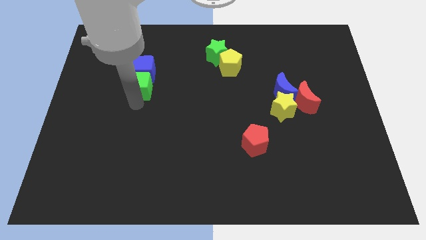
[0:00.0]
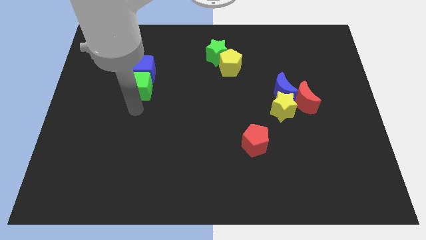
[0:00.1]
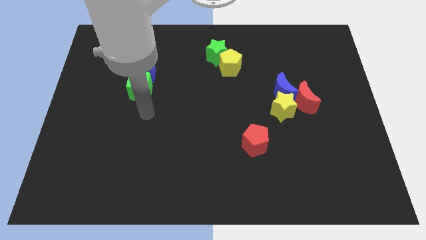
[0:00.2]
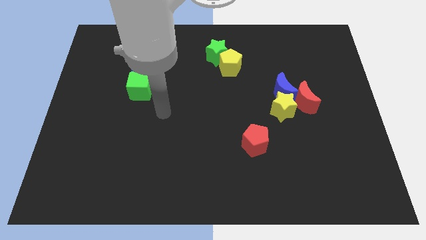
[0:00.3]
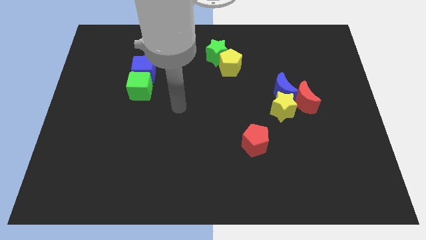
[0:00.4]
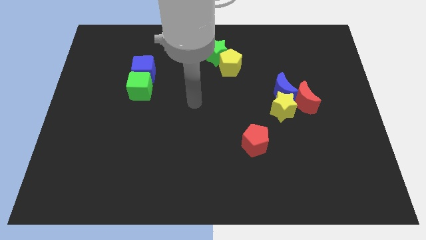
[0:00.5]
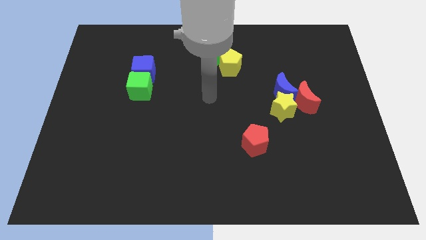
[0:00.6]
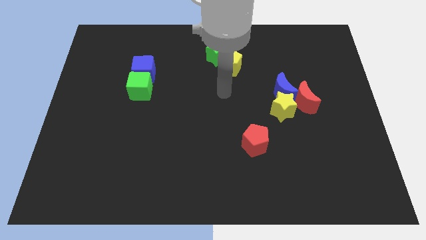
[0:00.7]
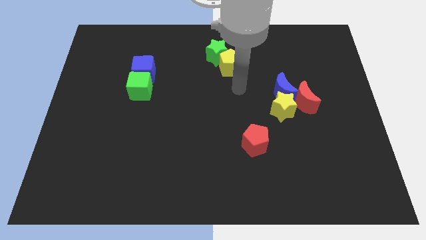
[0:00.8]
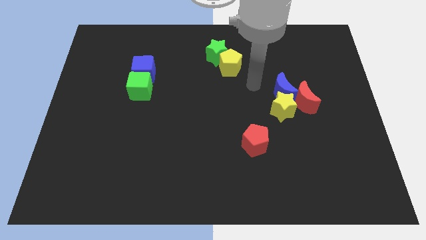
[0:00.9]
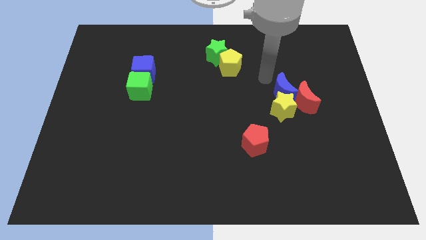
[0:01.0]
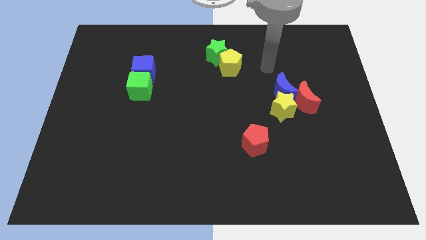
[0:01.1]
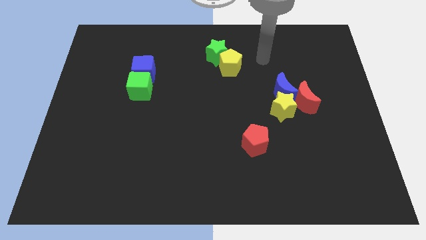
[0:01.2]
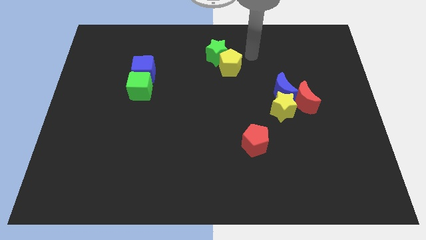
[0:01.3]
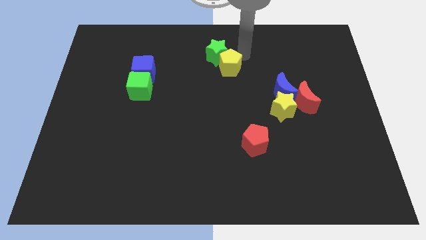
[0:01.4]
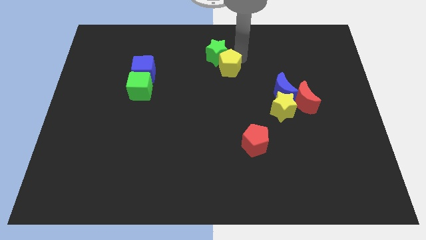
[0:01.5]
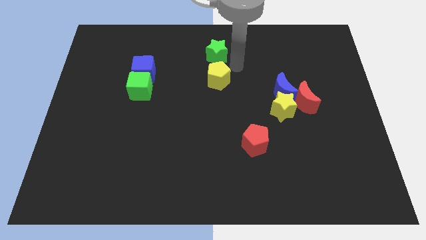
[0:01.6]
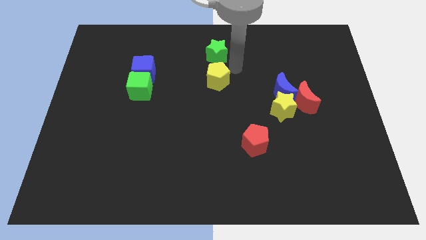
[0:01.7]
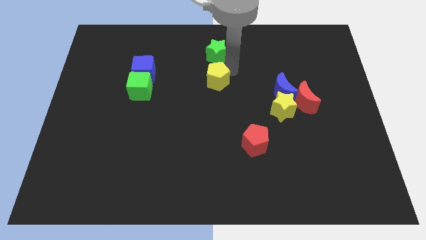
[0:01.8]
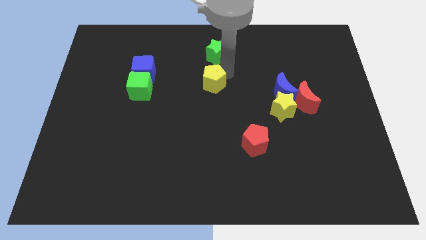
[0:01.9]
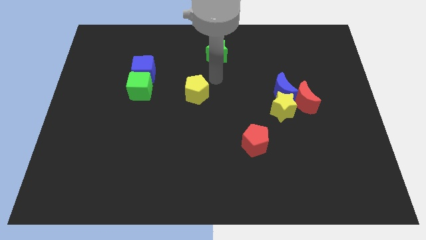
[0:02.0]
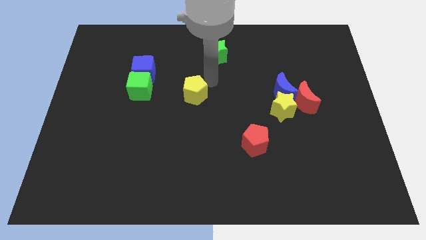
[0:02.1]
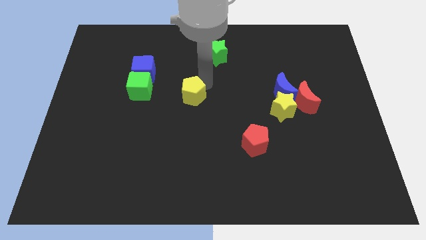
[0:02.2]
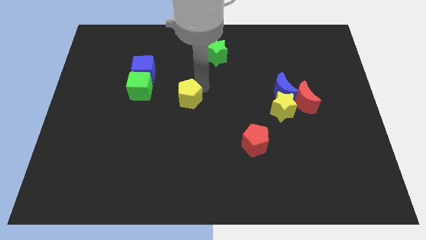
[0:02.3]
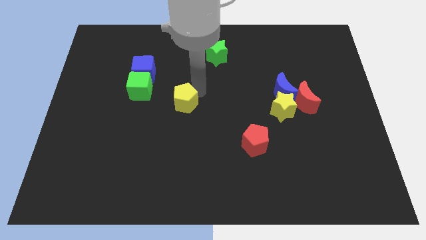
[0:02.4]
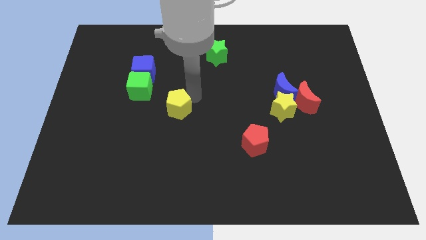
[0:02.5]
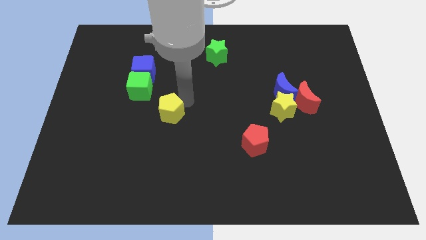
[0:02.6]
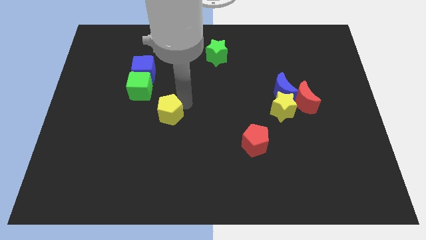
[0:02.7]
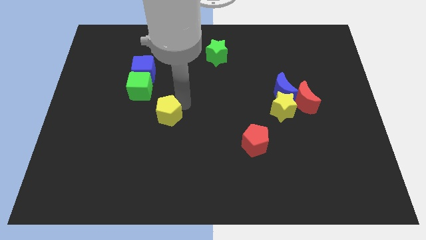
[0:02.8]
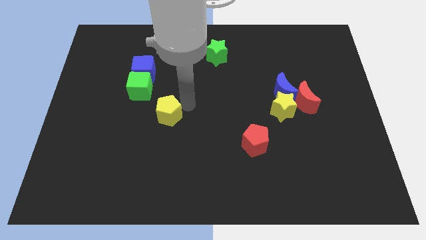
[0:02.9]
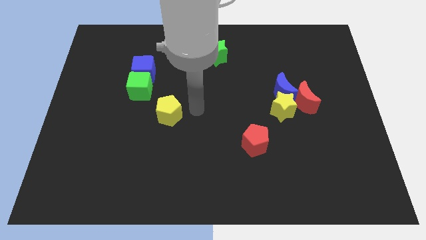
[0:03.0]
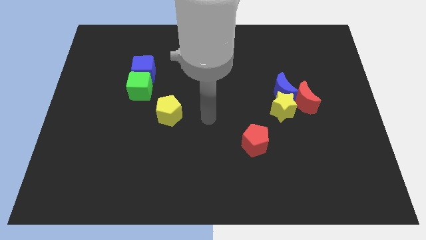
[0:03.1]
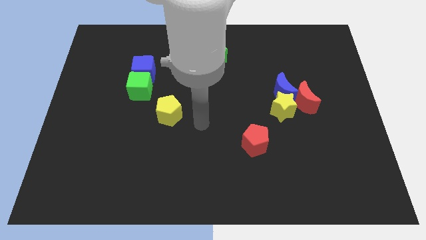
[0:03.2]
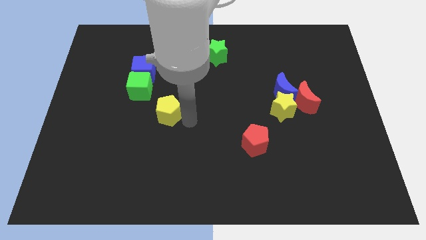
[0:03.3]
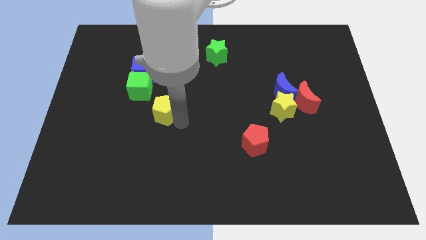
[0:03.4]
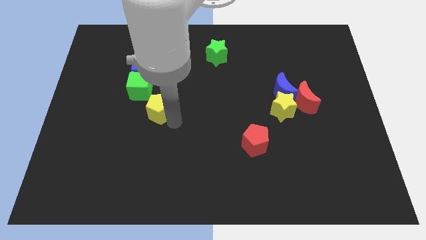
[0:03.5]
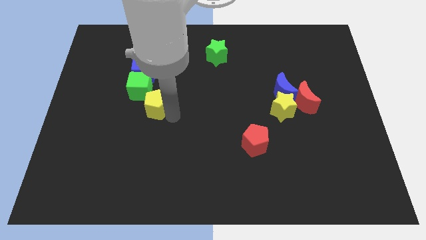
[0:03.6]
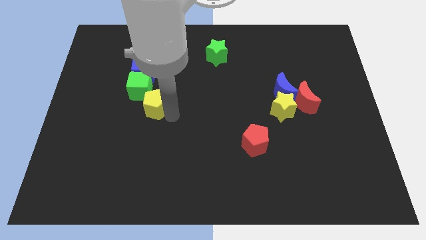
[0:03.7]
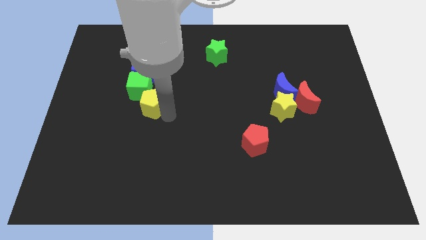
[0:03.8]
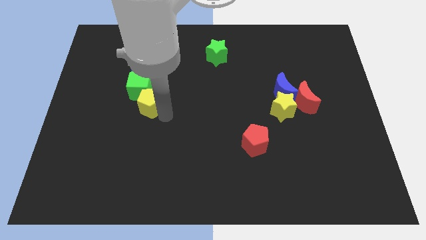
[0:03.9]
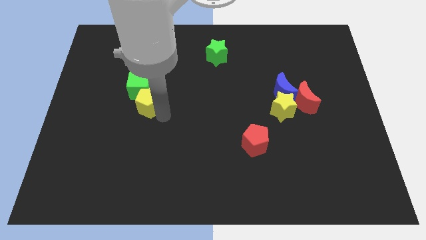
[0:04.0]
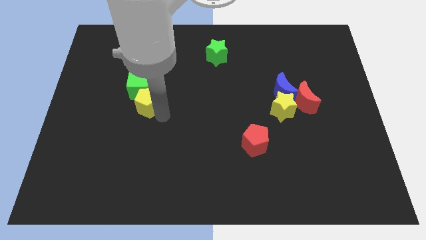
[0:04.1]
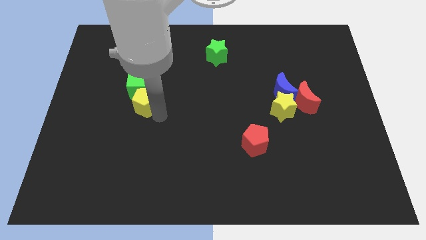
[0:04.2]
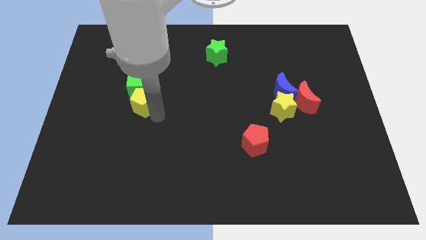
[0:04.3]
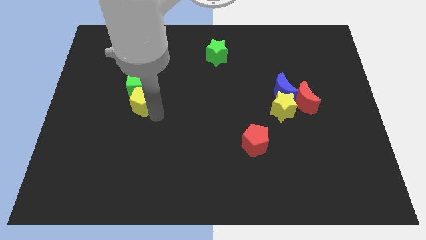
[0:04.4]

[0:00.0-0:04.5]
slide the yellow pentagon into the bottom side of the green cube

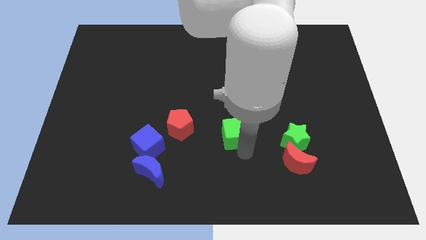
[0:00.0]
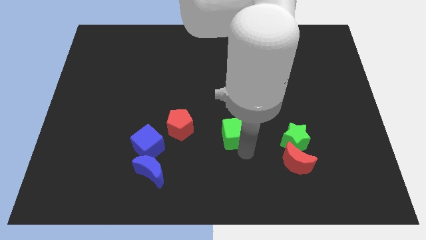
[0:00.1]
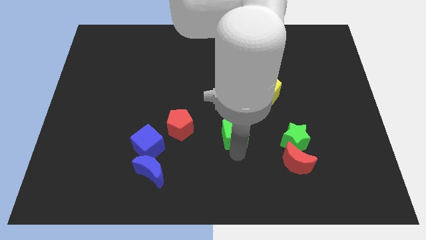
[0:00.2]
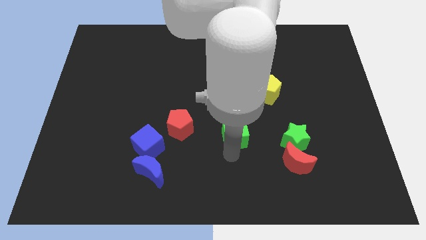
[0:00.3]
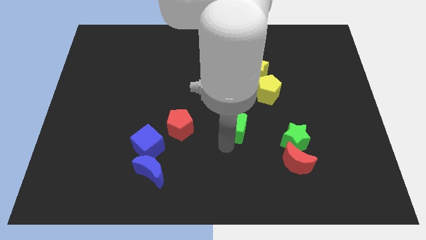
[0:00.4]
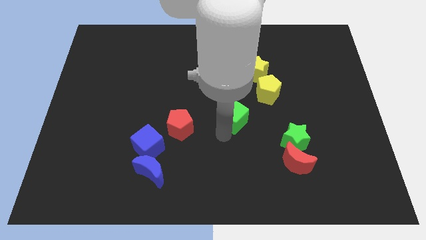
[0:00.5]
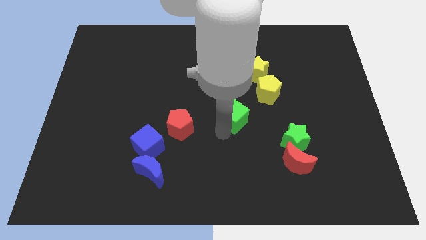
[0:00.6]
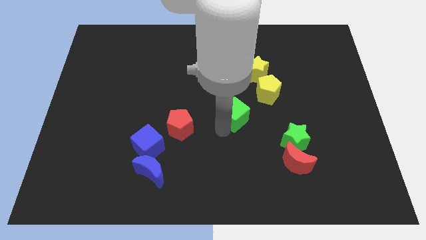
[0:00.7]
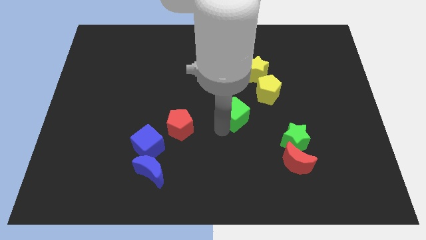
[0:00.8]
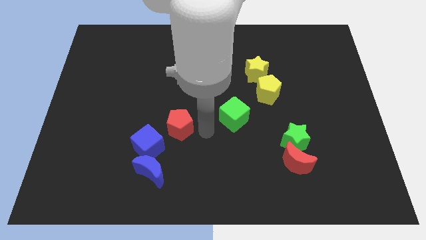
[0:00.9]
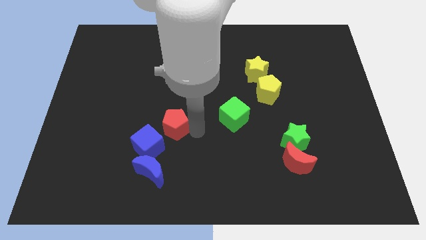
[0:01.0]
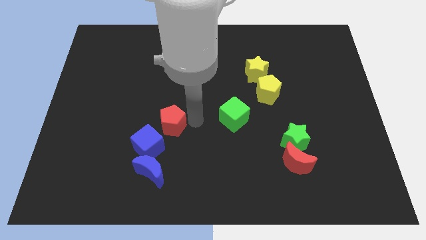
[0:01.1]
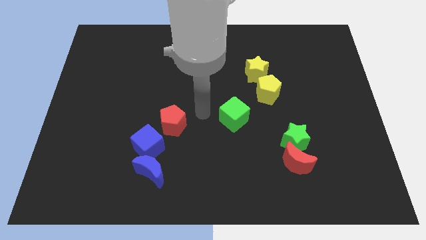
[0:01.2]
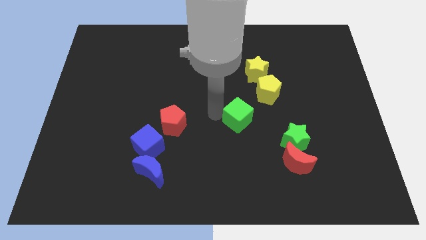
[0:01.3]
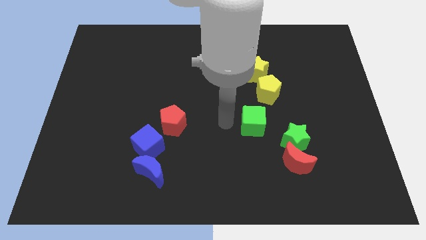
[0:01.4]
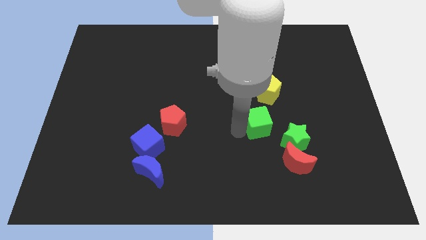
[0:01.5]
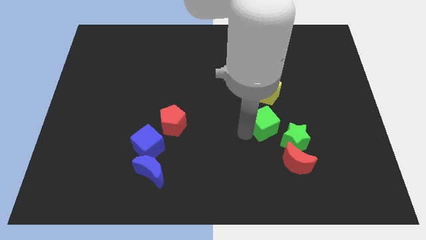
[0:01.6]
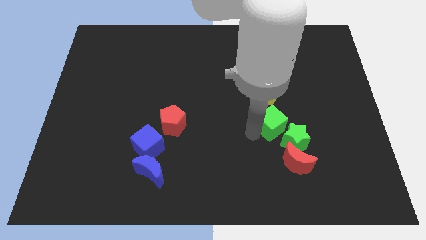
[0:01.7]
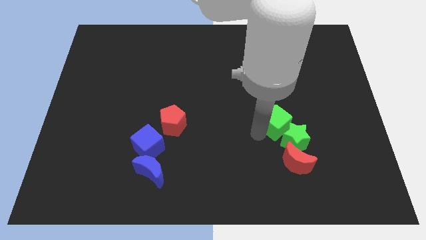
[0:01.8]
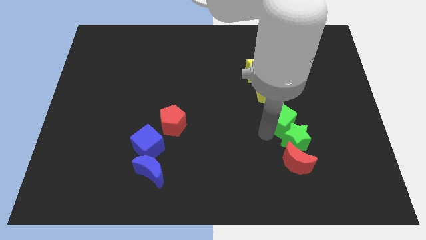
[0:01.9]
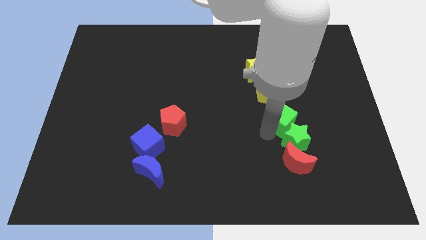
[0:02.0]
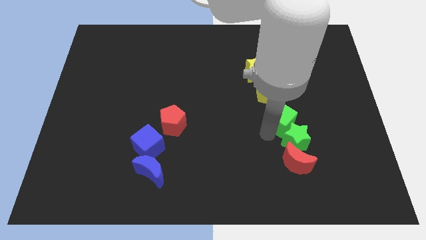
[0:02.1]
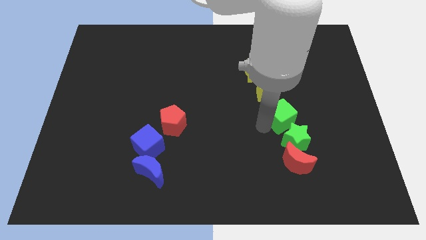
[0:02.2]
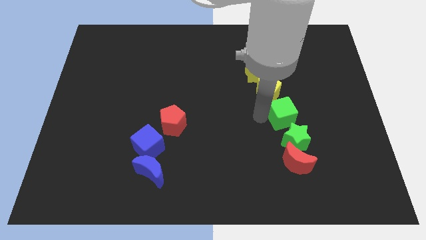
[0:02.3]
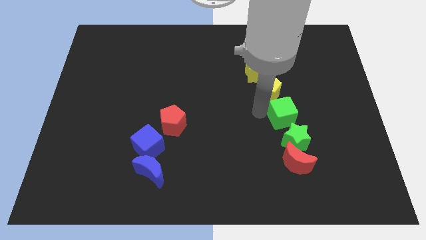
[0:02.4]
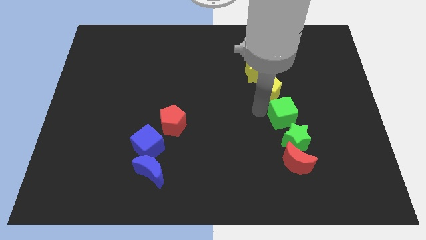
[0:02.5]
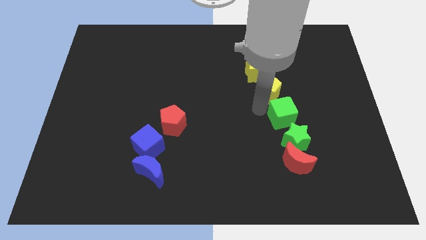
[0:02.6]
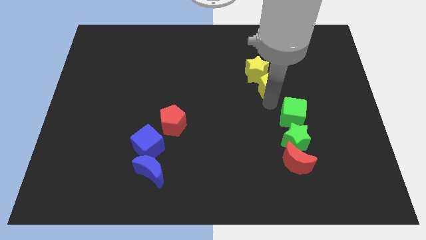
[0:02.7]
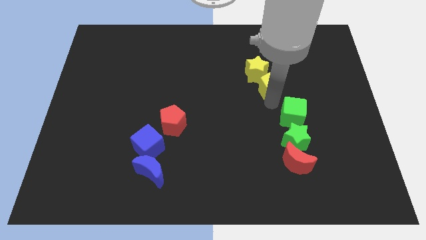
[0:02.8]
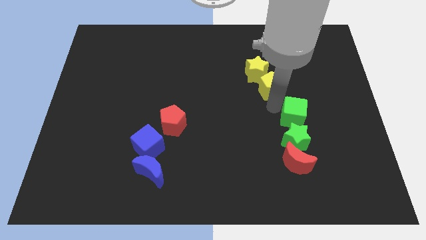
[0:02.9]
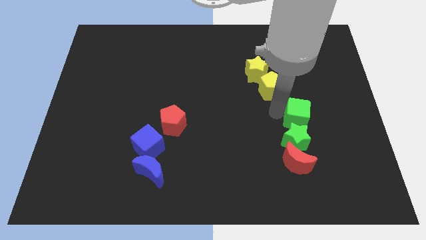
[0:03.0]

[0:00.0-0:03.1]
push the green cube to the top of the green star

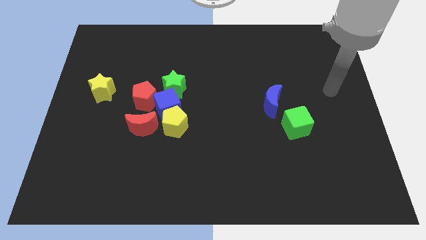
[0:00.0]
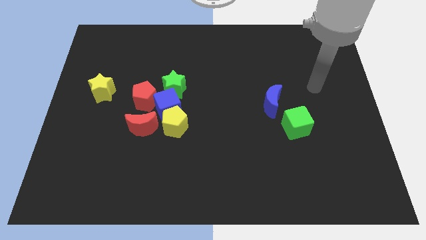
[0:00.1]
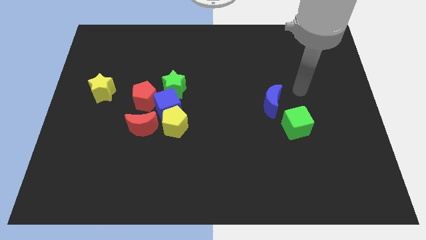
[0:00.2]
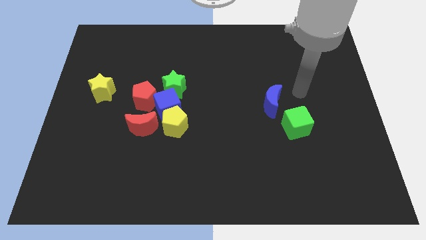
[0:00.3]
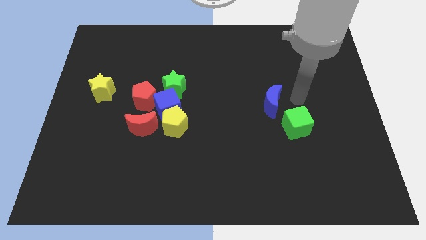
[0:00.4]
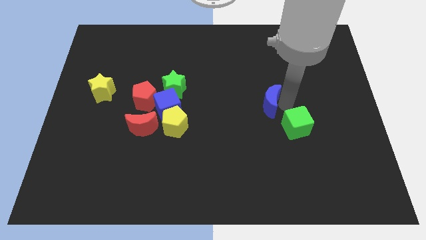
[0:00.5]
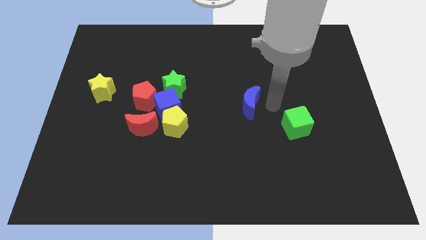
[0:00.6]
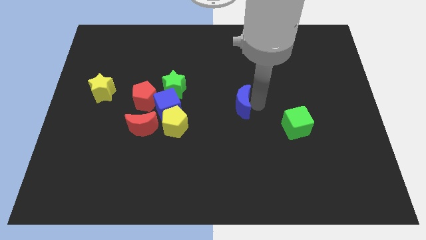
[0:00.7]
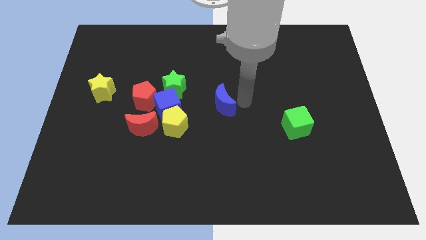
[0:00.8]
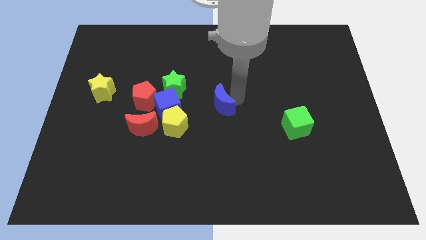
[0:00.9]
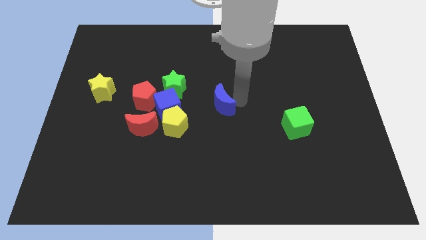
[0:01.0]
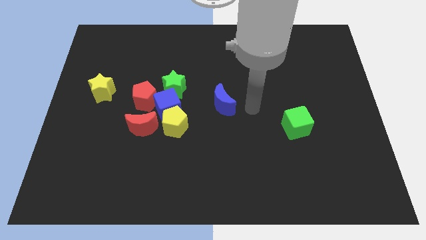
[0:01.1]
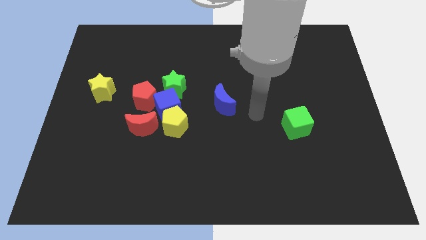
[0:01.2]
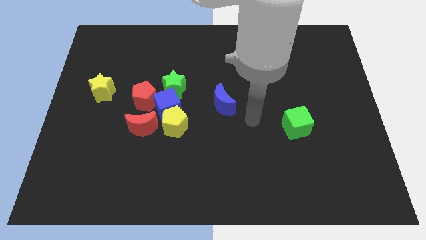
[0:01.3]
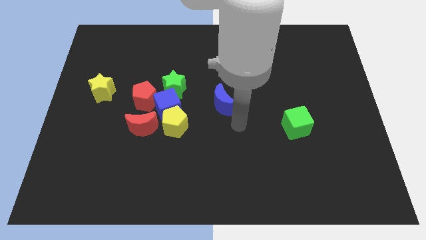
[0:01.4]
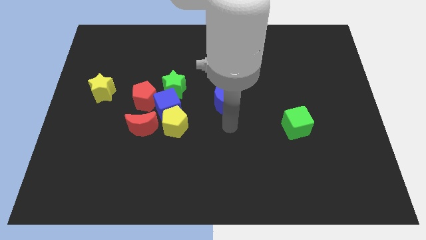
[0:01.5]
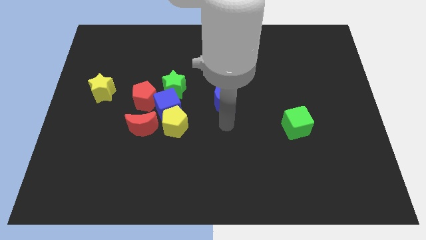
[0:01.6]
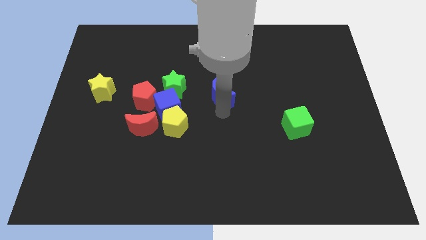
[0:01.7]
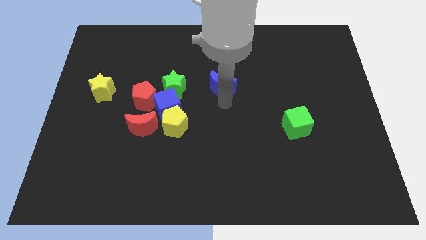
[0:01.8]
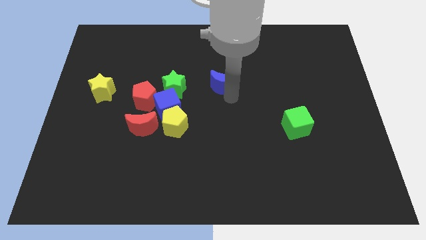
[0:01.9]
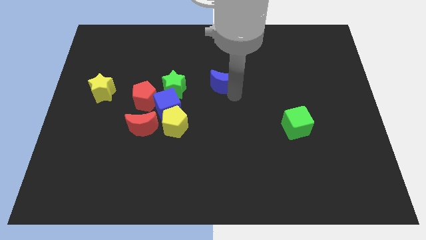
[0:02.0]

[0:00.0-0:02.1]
push the blue crescent to the right of the green star
